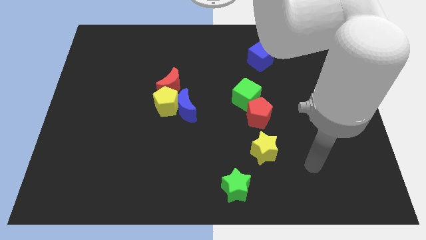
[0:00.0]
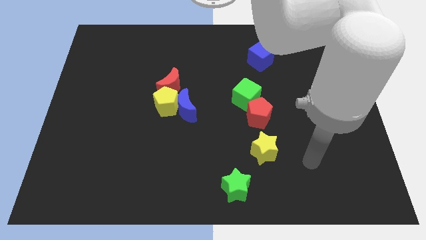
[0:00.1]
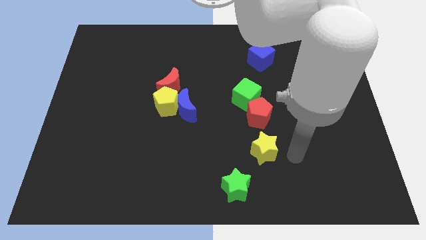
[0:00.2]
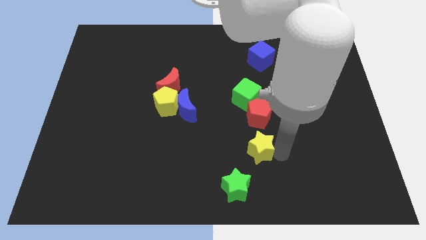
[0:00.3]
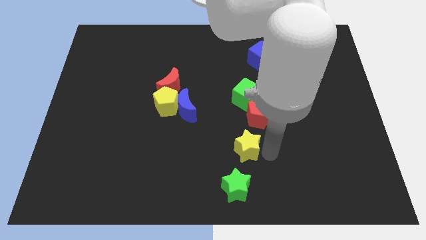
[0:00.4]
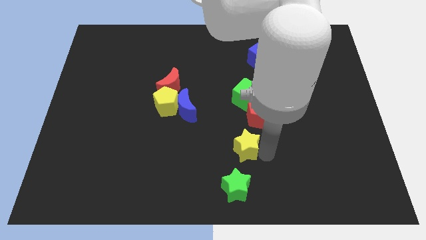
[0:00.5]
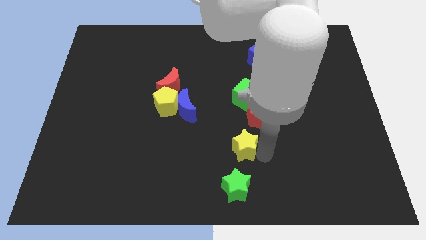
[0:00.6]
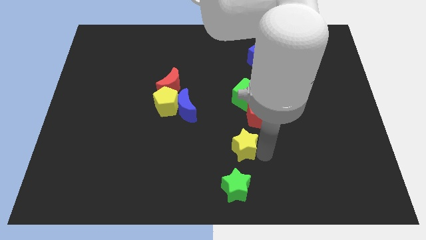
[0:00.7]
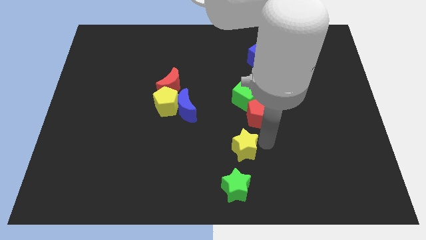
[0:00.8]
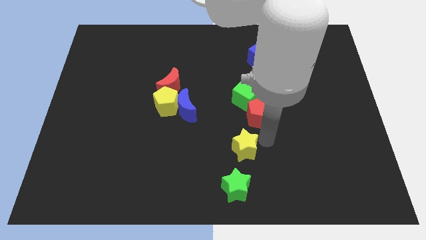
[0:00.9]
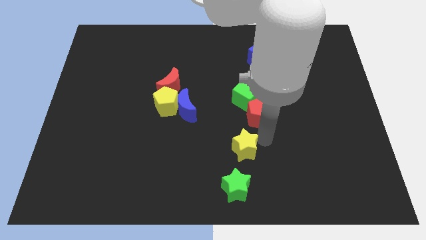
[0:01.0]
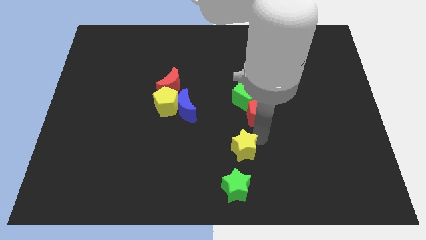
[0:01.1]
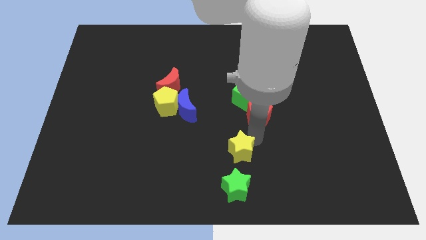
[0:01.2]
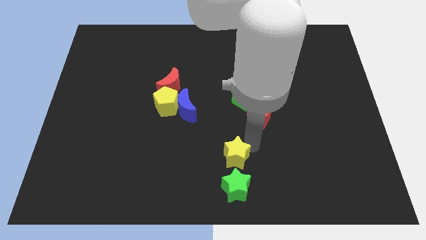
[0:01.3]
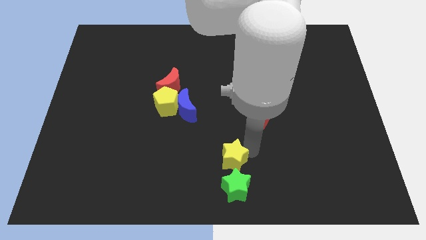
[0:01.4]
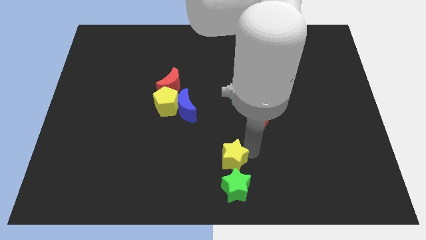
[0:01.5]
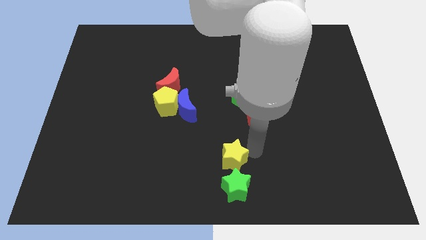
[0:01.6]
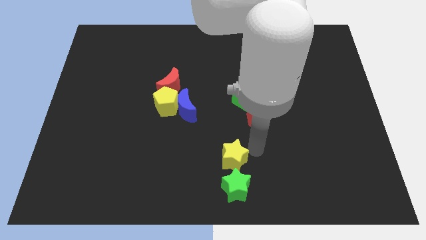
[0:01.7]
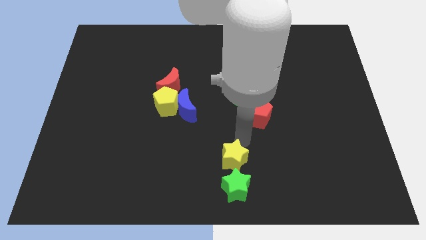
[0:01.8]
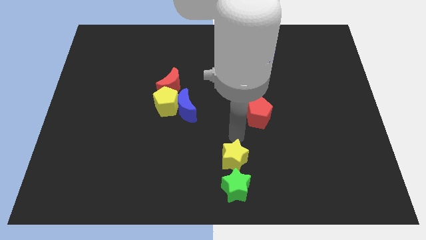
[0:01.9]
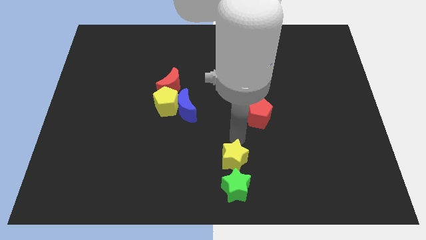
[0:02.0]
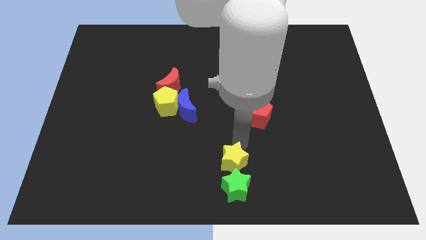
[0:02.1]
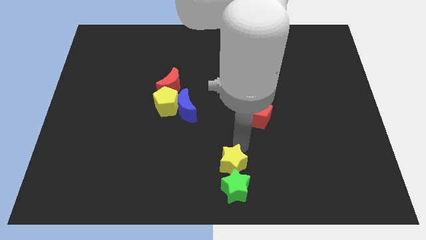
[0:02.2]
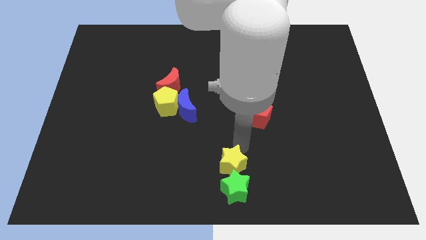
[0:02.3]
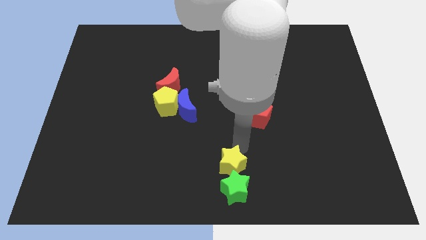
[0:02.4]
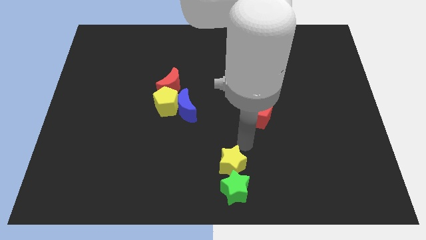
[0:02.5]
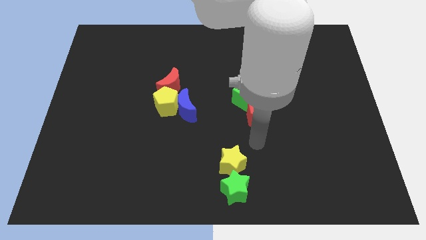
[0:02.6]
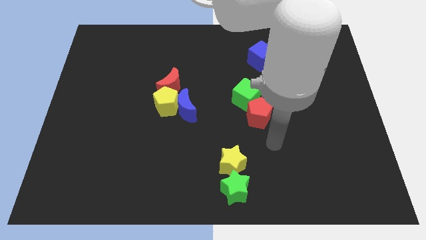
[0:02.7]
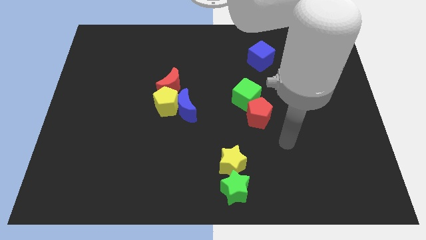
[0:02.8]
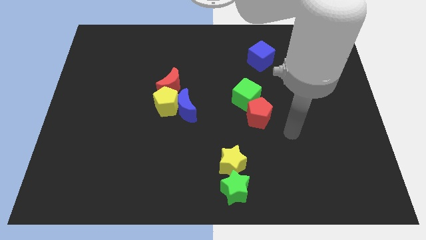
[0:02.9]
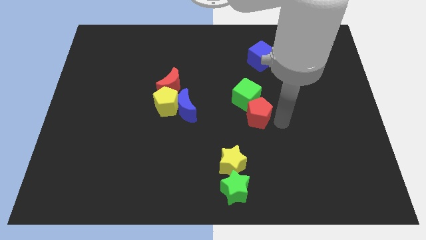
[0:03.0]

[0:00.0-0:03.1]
move the yellow star into the green star

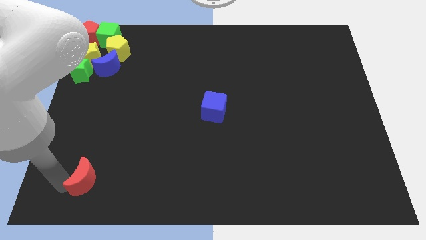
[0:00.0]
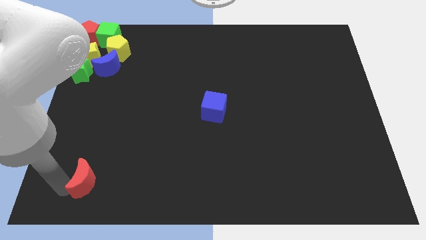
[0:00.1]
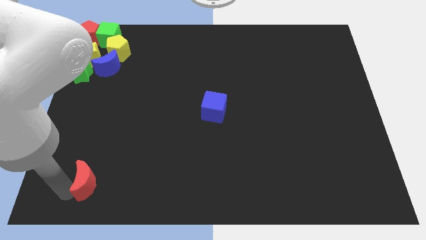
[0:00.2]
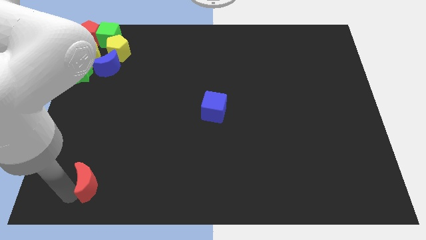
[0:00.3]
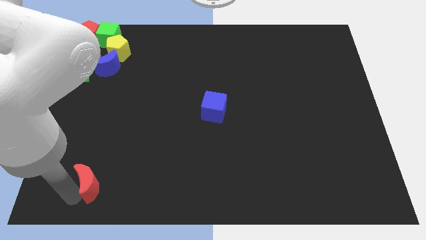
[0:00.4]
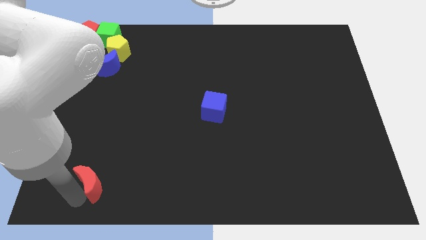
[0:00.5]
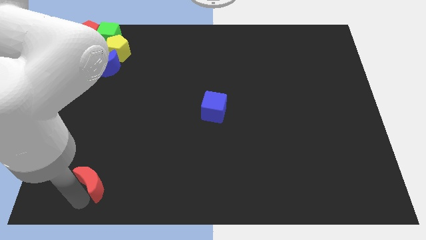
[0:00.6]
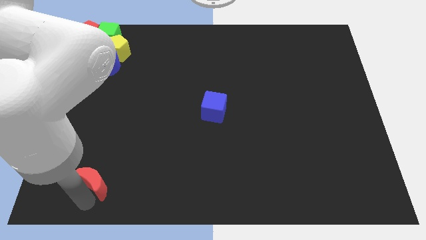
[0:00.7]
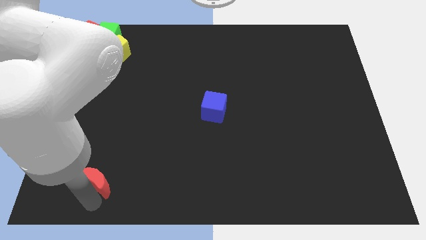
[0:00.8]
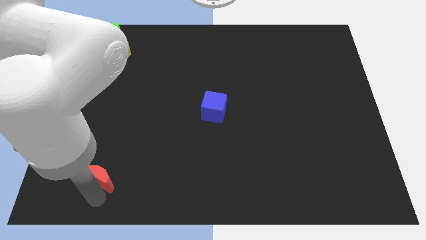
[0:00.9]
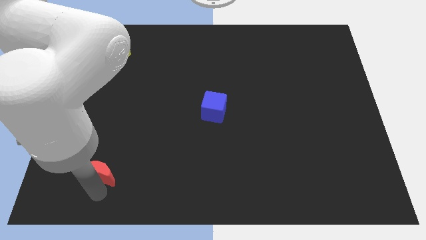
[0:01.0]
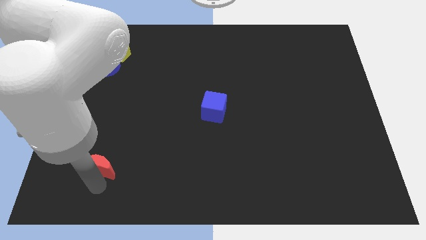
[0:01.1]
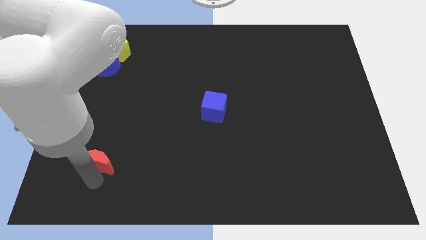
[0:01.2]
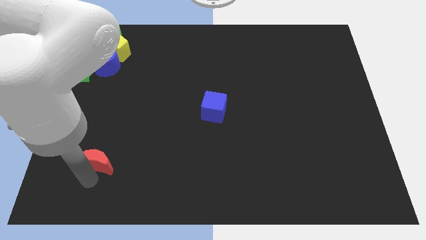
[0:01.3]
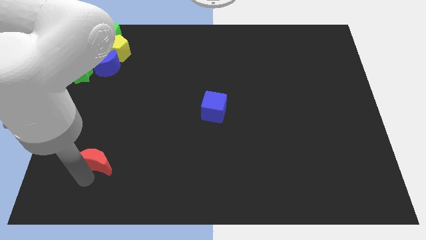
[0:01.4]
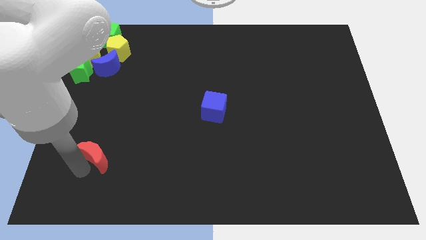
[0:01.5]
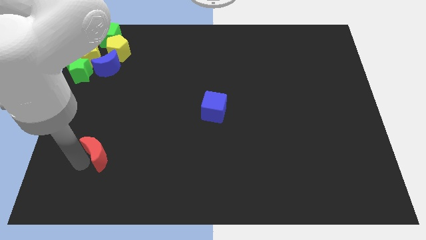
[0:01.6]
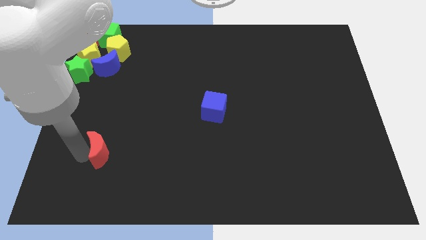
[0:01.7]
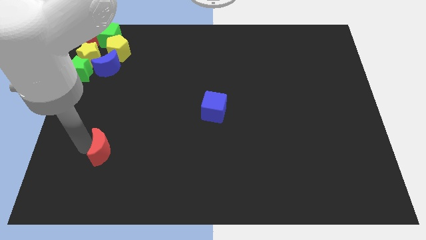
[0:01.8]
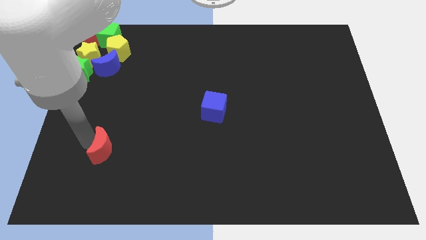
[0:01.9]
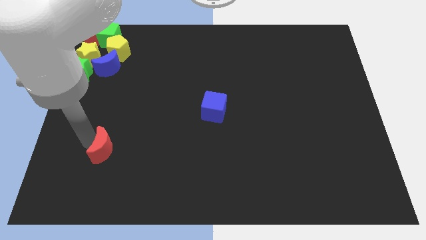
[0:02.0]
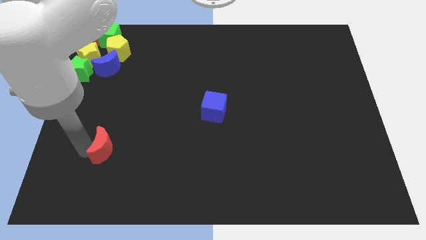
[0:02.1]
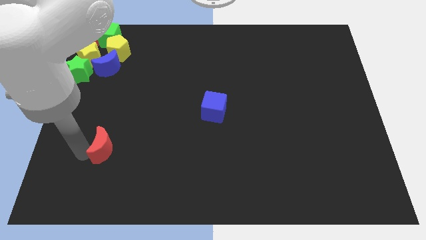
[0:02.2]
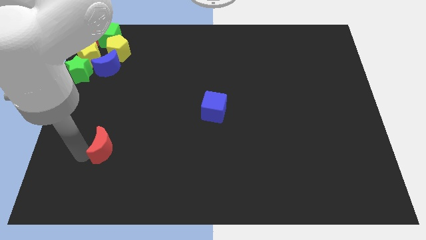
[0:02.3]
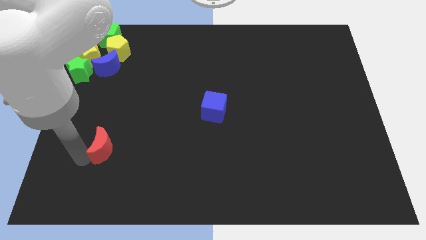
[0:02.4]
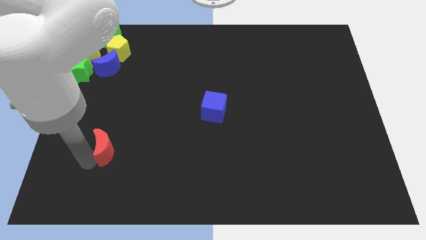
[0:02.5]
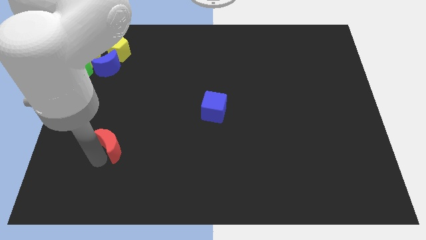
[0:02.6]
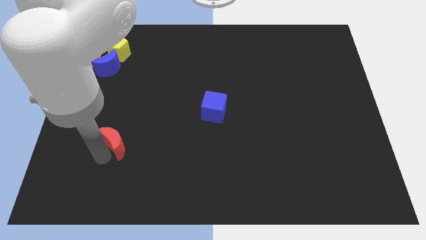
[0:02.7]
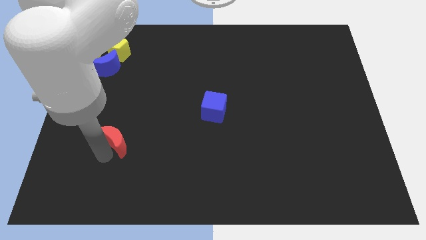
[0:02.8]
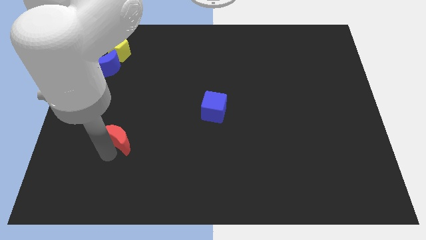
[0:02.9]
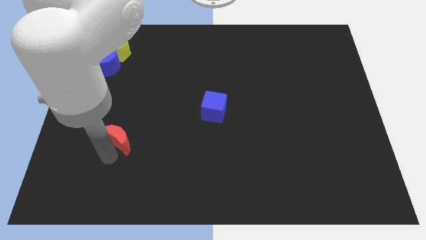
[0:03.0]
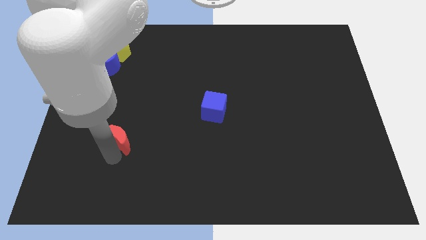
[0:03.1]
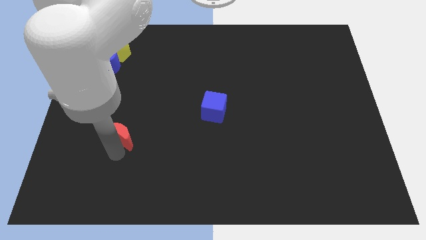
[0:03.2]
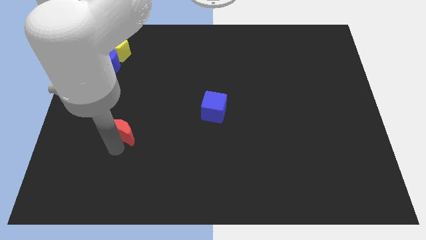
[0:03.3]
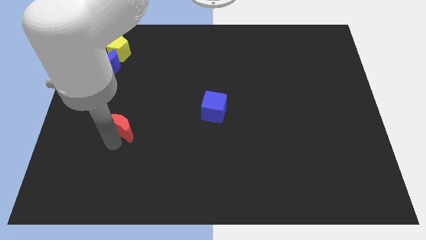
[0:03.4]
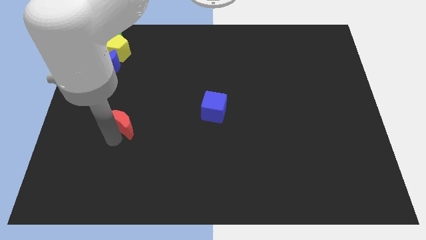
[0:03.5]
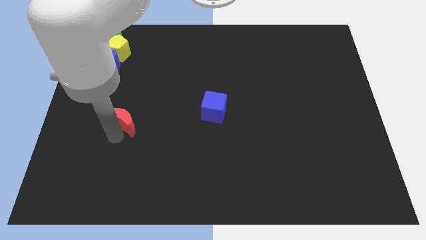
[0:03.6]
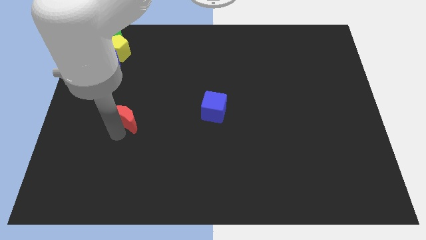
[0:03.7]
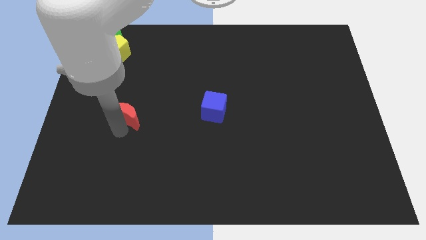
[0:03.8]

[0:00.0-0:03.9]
move red moon towards top

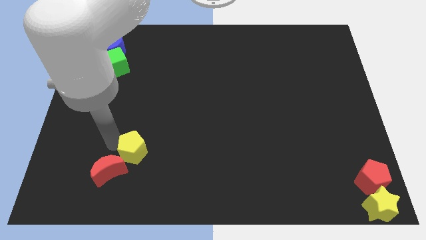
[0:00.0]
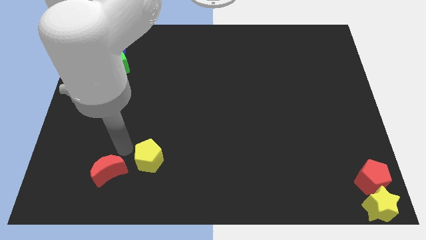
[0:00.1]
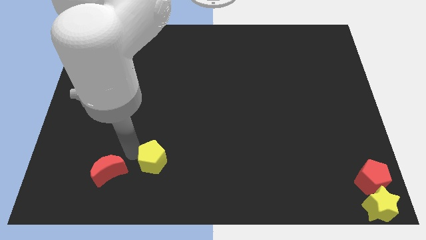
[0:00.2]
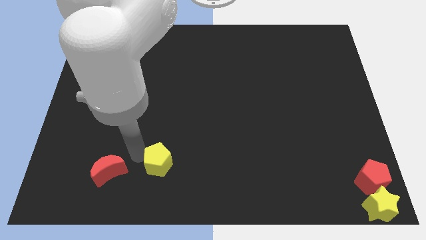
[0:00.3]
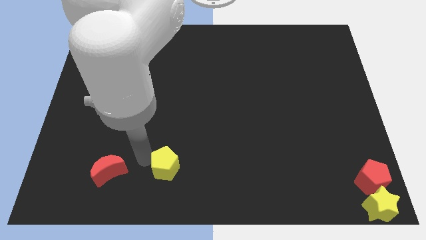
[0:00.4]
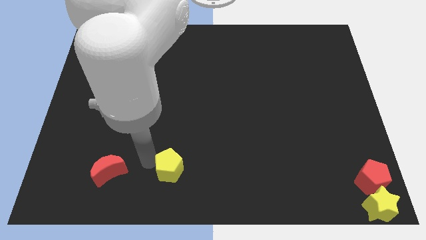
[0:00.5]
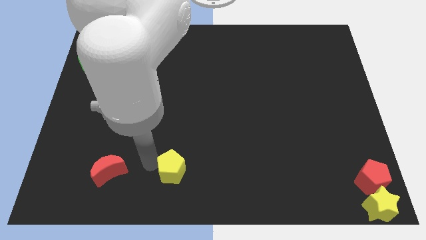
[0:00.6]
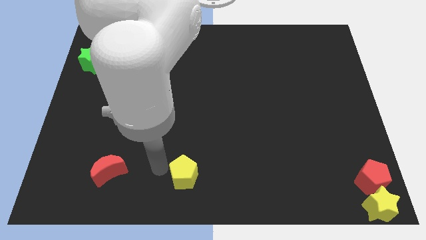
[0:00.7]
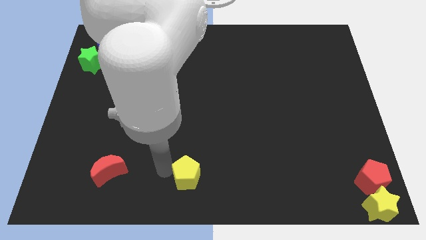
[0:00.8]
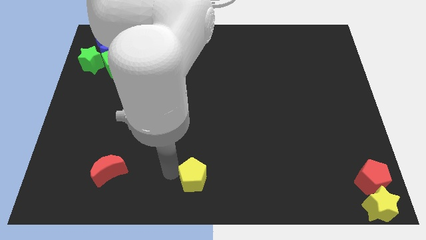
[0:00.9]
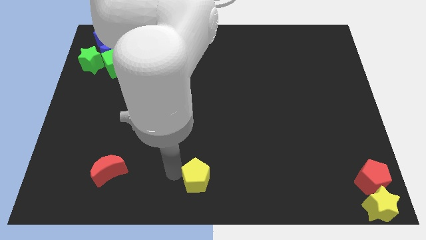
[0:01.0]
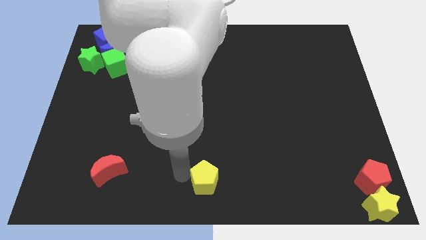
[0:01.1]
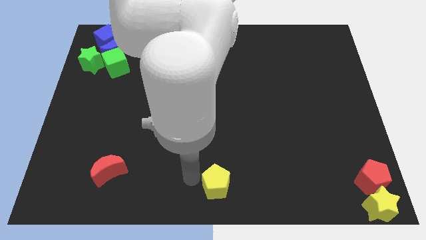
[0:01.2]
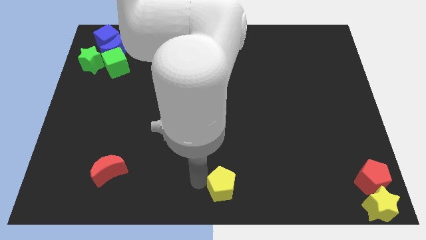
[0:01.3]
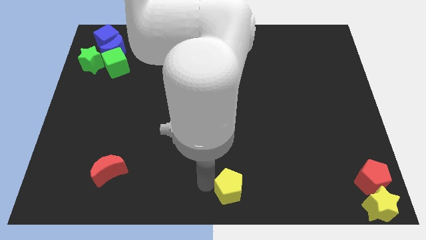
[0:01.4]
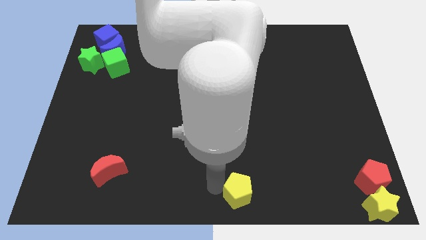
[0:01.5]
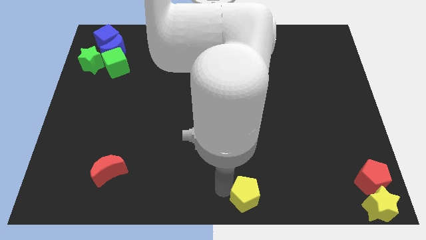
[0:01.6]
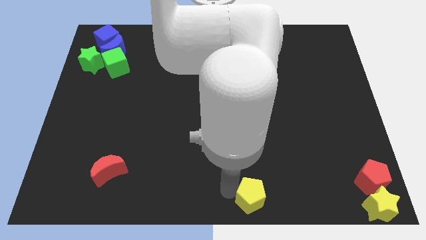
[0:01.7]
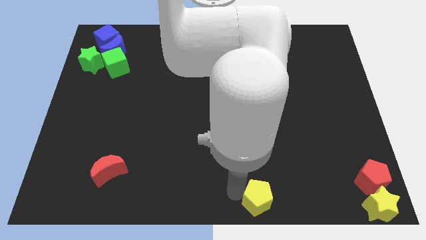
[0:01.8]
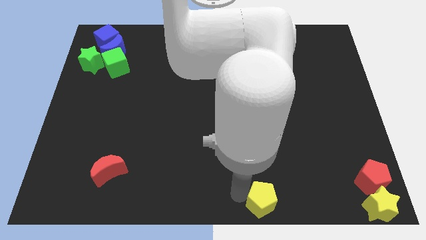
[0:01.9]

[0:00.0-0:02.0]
put the yellow pentagon at the bottom center
